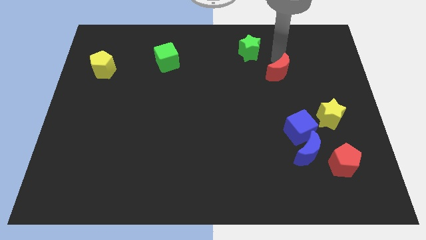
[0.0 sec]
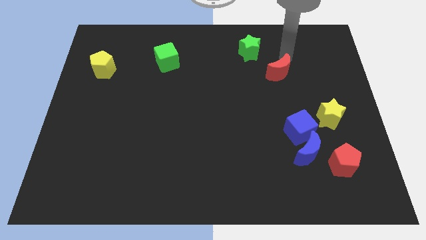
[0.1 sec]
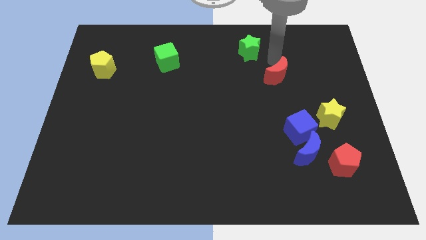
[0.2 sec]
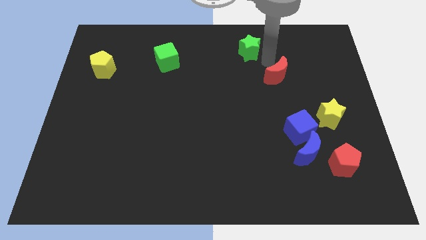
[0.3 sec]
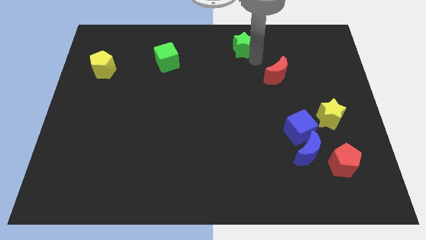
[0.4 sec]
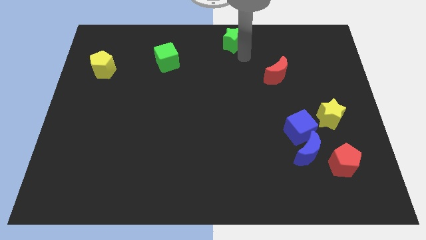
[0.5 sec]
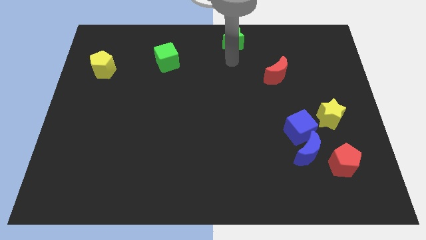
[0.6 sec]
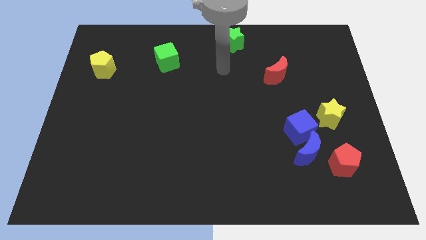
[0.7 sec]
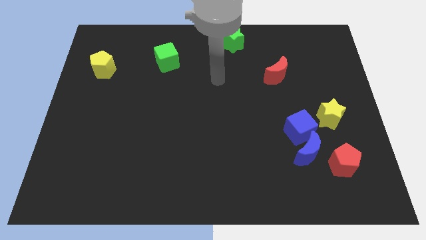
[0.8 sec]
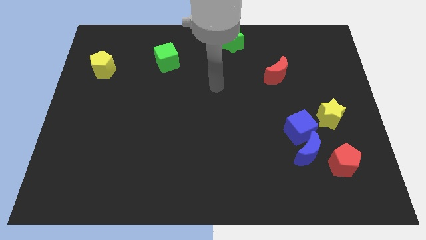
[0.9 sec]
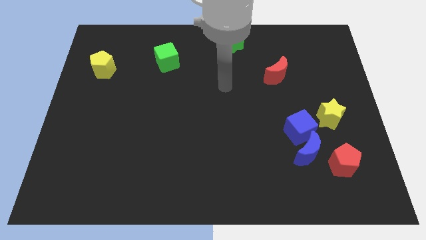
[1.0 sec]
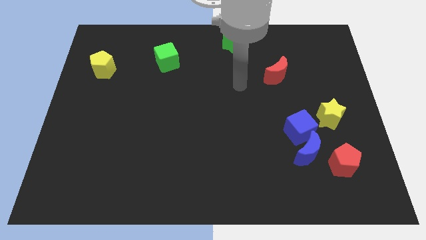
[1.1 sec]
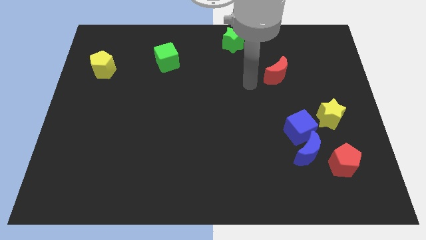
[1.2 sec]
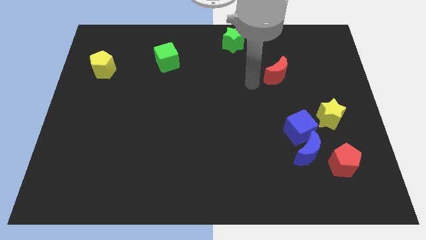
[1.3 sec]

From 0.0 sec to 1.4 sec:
move the green star to the top center of the board

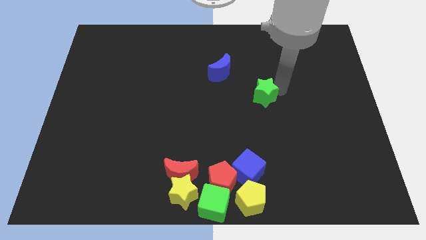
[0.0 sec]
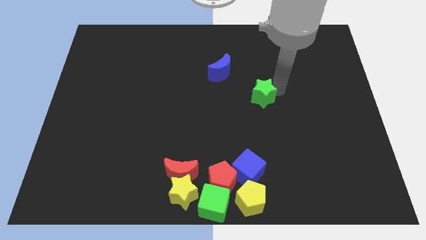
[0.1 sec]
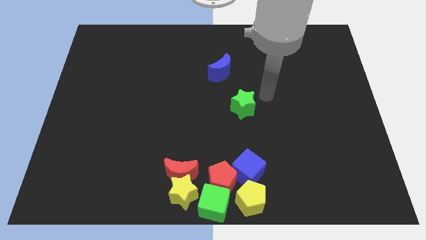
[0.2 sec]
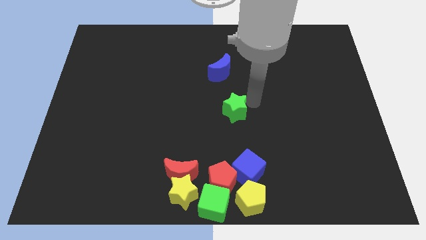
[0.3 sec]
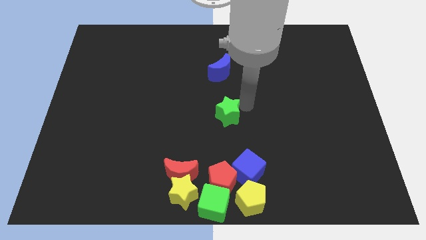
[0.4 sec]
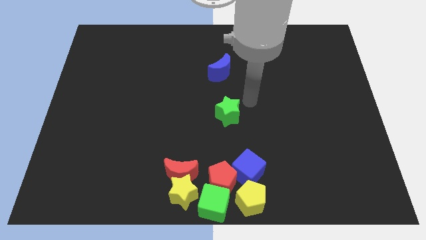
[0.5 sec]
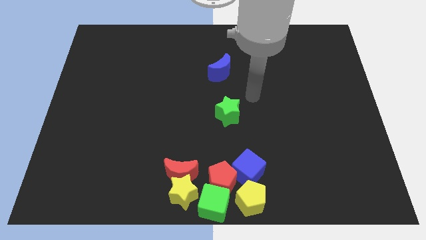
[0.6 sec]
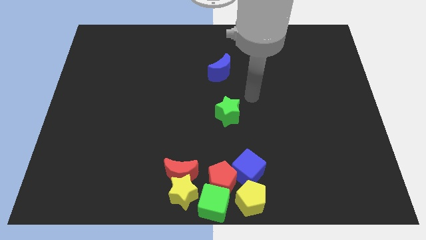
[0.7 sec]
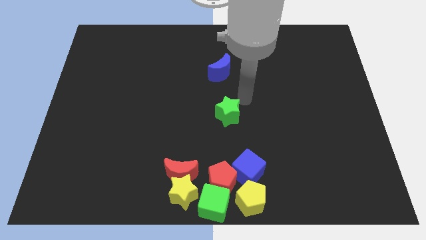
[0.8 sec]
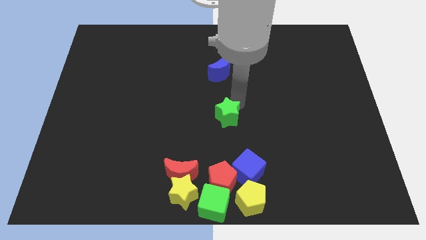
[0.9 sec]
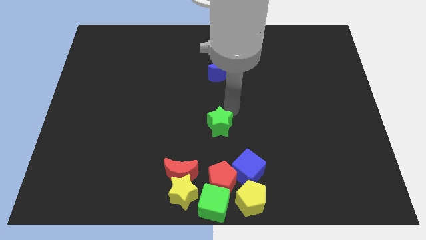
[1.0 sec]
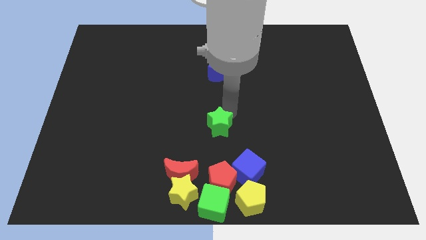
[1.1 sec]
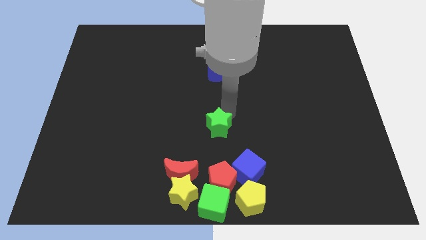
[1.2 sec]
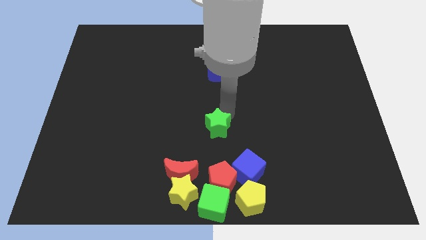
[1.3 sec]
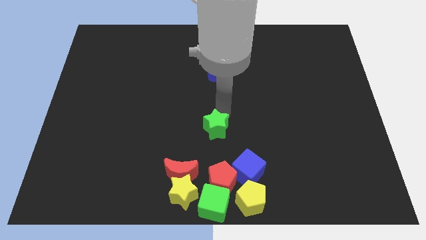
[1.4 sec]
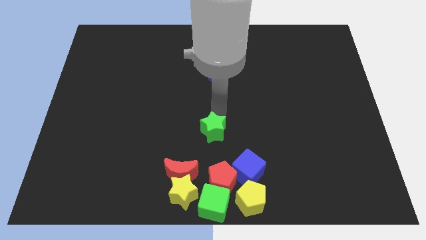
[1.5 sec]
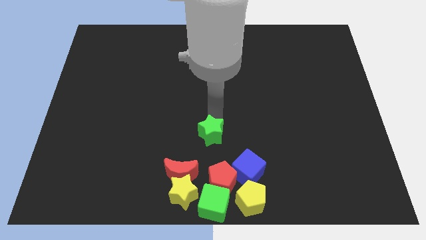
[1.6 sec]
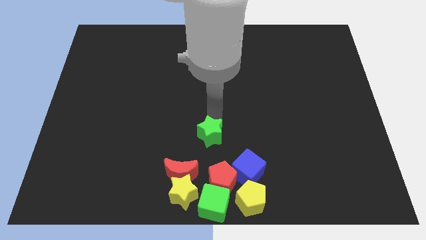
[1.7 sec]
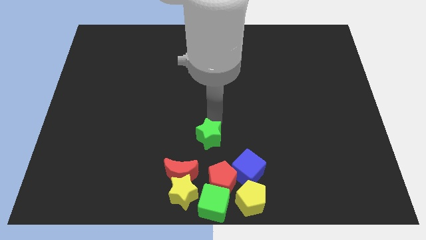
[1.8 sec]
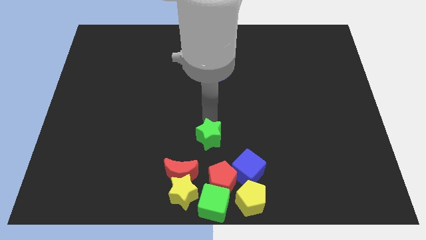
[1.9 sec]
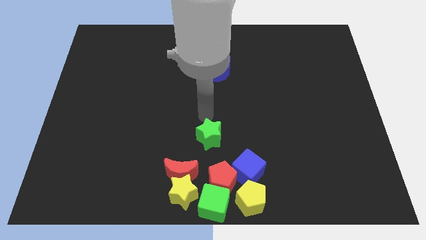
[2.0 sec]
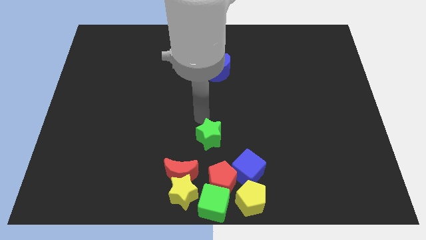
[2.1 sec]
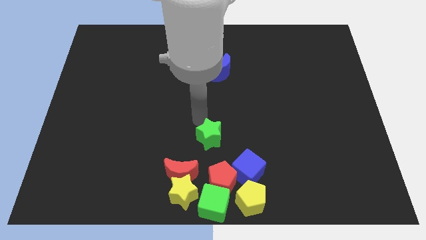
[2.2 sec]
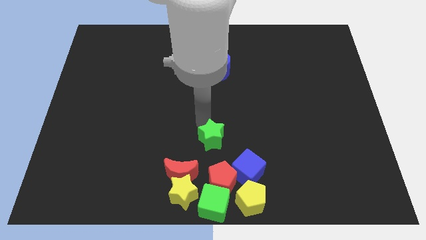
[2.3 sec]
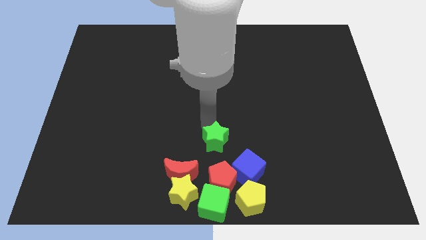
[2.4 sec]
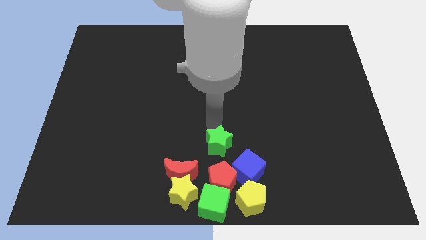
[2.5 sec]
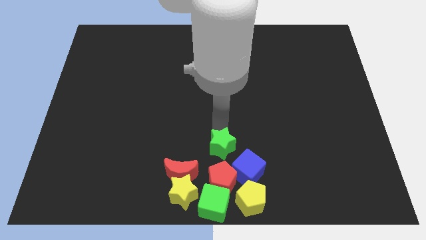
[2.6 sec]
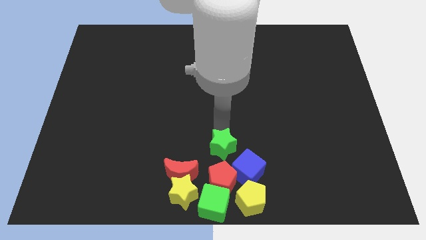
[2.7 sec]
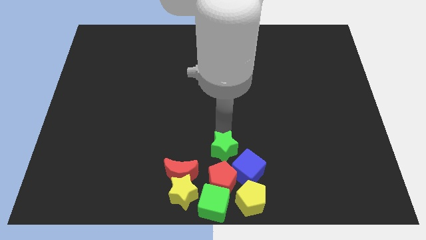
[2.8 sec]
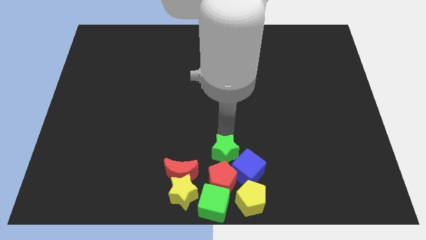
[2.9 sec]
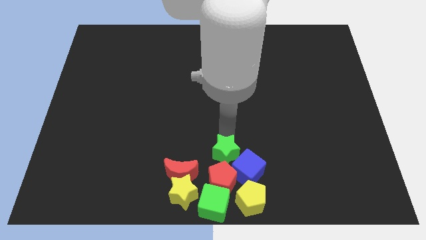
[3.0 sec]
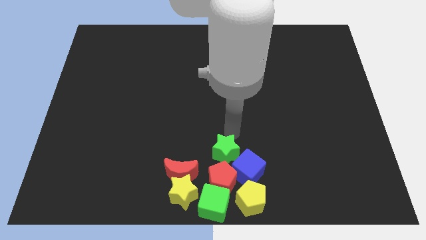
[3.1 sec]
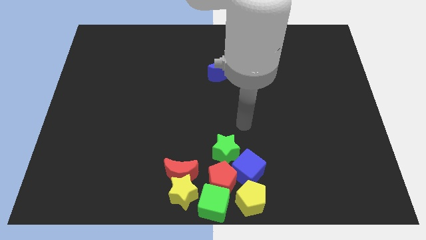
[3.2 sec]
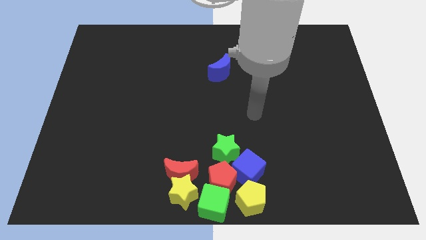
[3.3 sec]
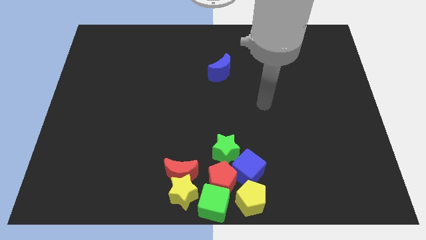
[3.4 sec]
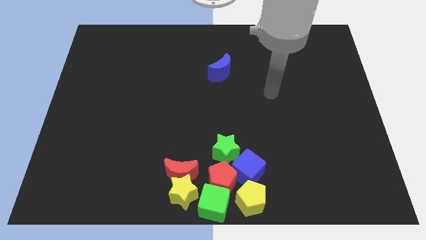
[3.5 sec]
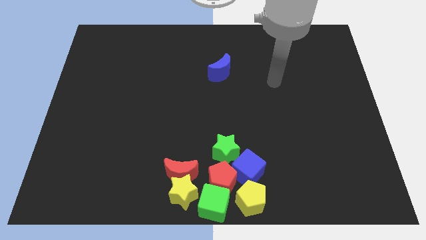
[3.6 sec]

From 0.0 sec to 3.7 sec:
place the green star above the red pentagon

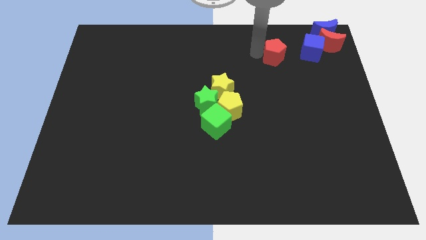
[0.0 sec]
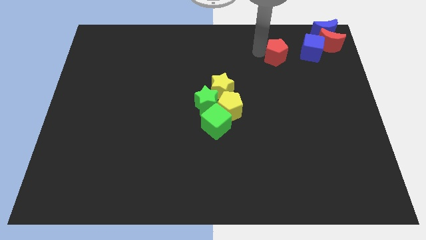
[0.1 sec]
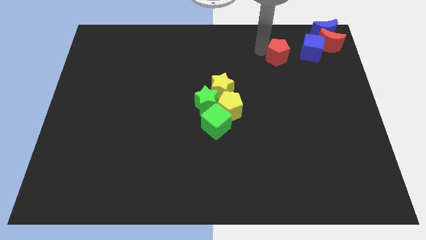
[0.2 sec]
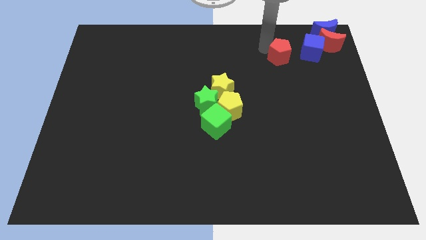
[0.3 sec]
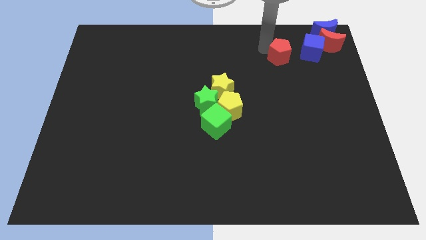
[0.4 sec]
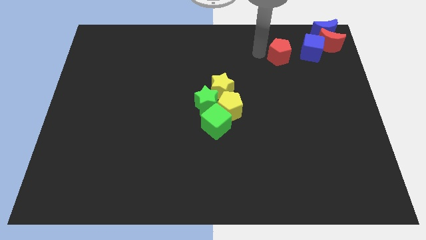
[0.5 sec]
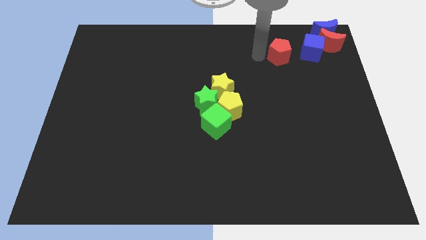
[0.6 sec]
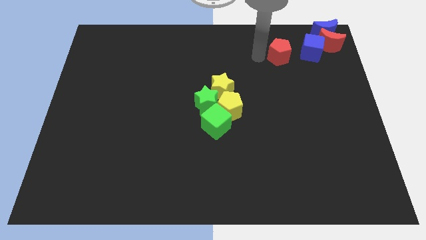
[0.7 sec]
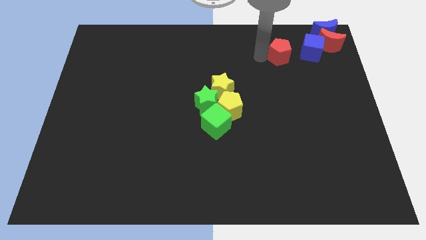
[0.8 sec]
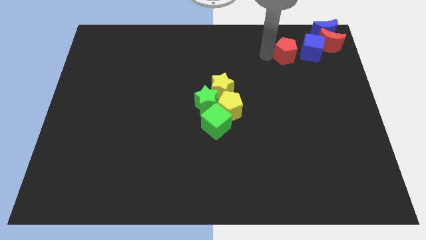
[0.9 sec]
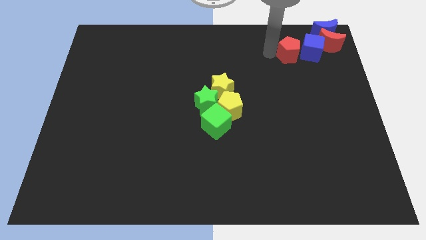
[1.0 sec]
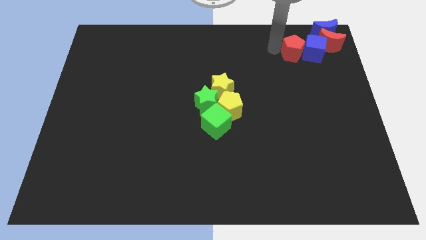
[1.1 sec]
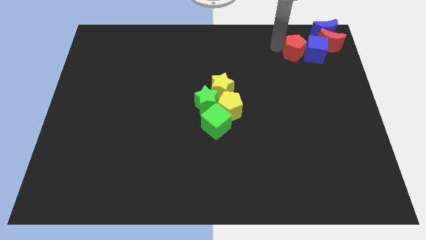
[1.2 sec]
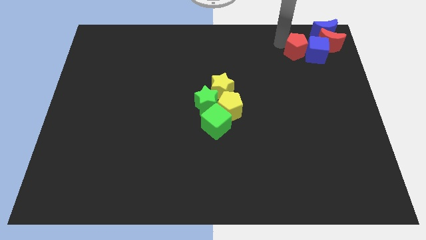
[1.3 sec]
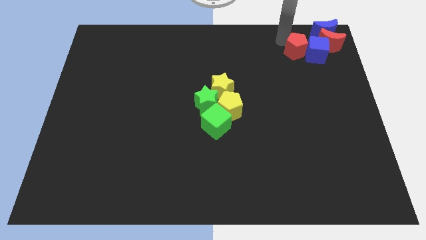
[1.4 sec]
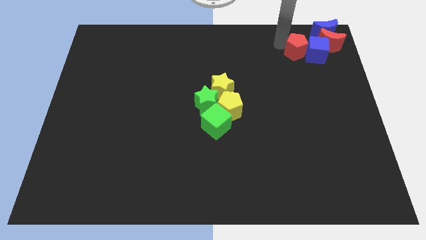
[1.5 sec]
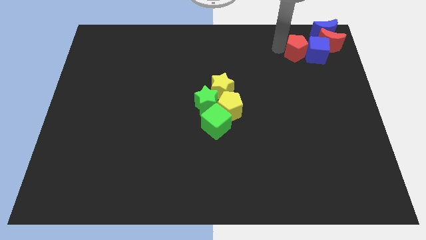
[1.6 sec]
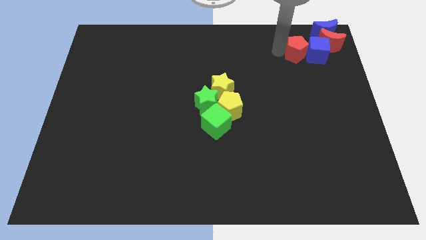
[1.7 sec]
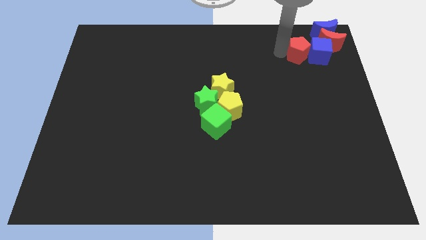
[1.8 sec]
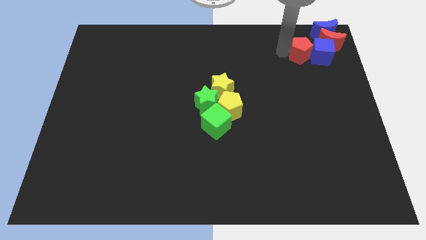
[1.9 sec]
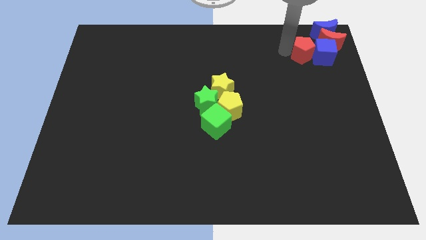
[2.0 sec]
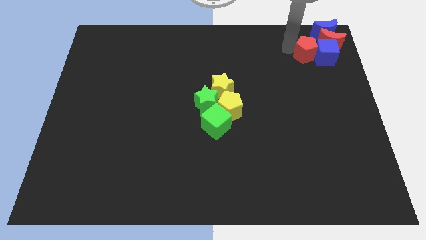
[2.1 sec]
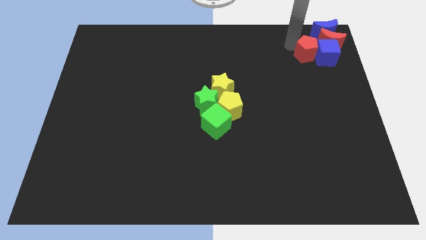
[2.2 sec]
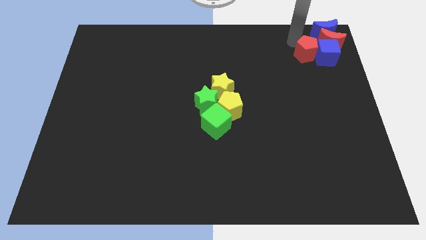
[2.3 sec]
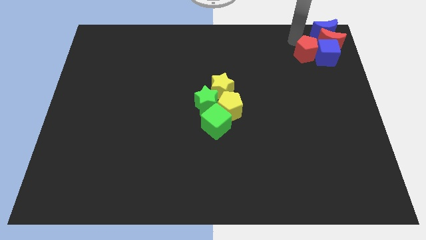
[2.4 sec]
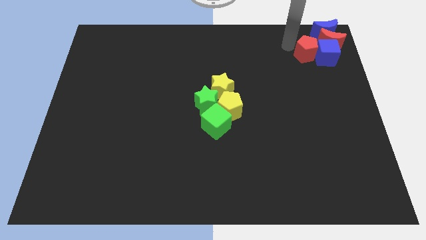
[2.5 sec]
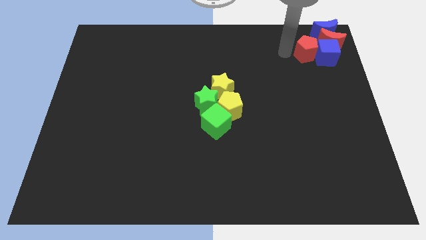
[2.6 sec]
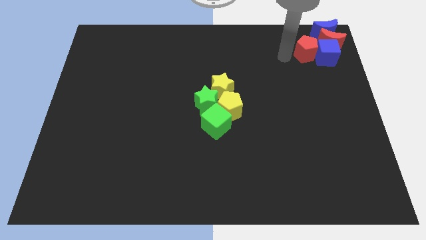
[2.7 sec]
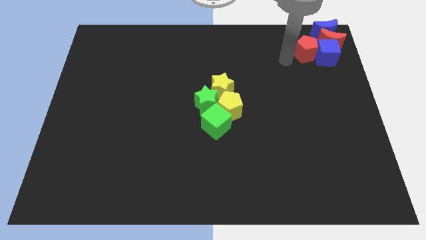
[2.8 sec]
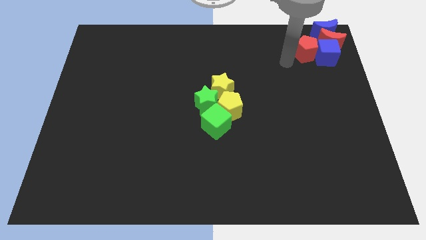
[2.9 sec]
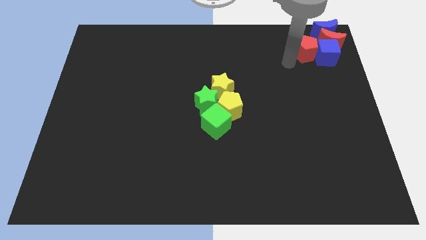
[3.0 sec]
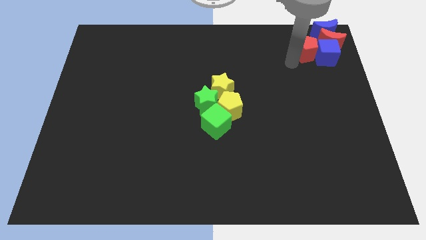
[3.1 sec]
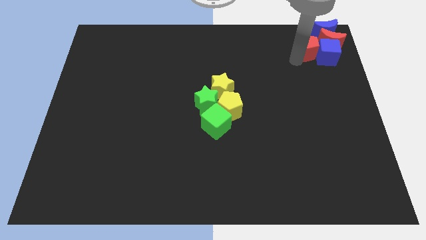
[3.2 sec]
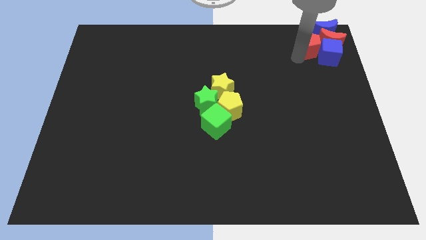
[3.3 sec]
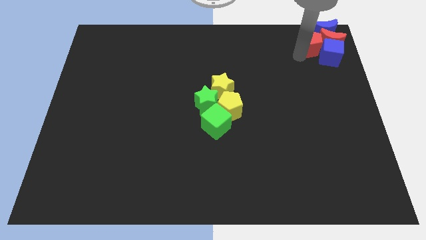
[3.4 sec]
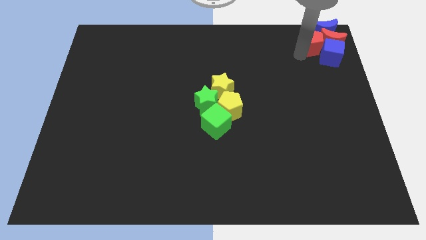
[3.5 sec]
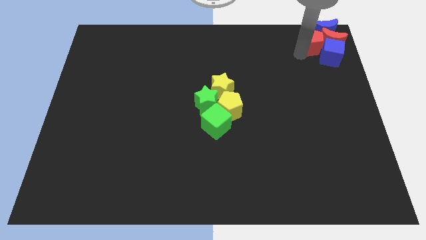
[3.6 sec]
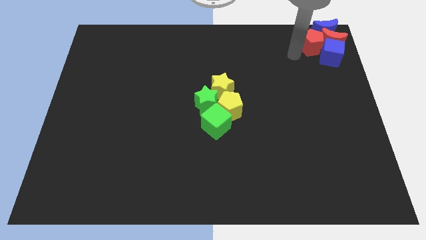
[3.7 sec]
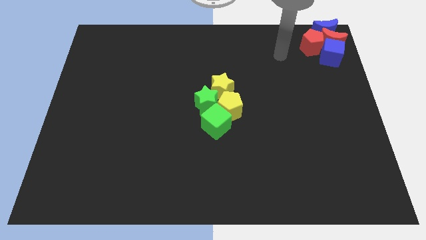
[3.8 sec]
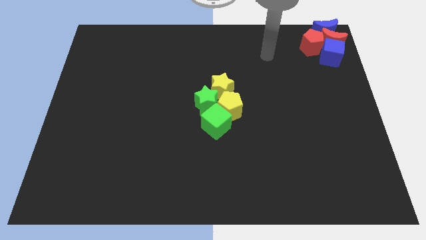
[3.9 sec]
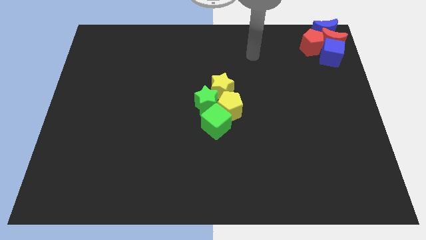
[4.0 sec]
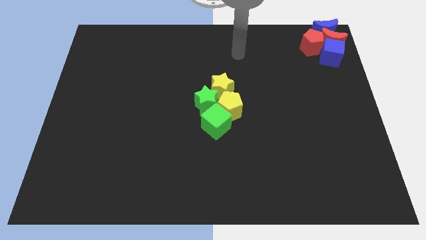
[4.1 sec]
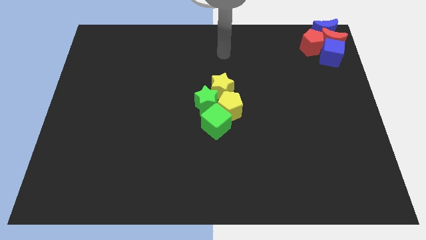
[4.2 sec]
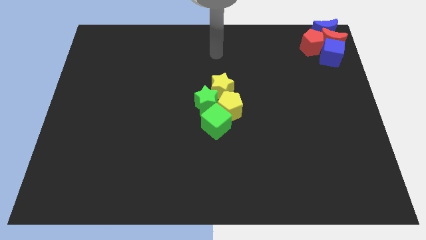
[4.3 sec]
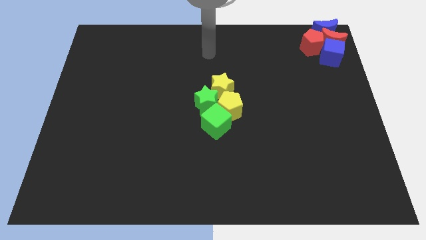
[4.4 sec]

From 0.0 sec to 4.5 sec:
push the red pentagon into the red crescent
